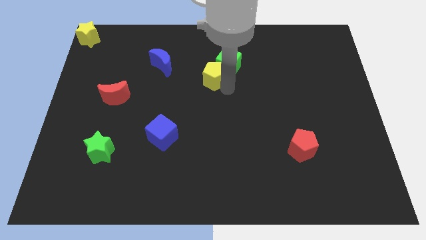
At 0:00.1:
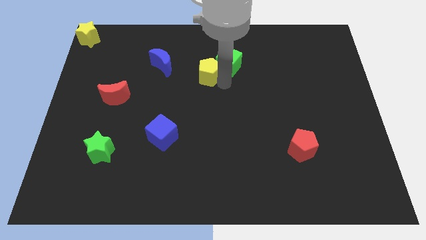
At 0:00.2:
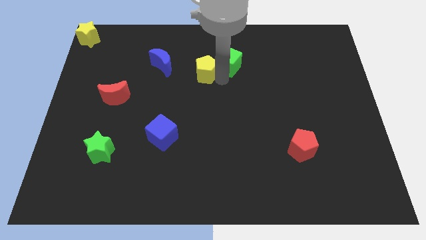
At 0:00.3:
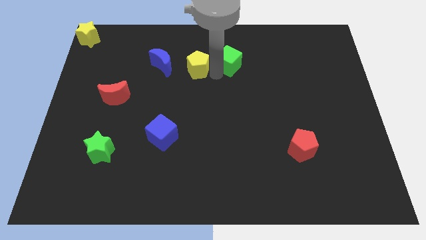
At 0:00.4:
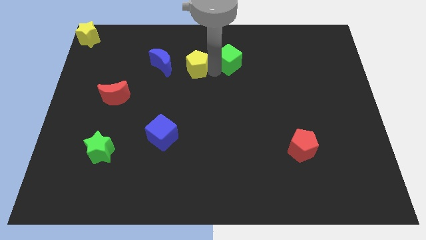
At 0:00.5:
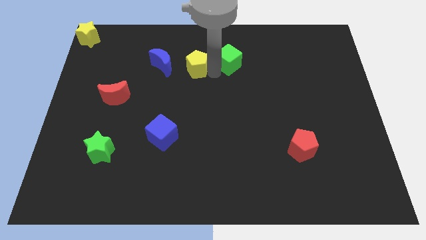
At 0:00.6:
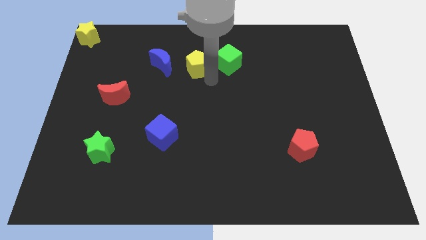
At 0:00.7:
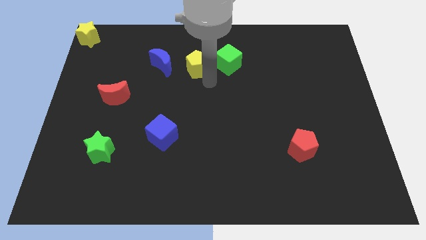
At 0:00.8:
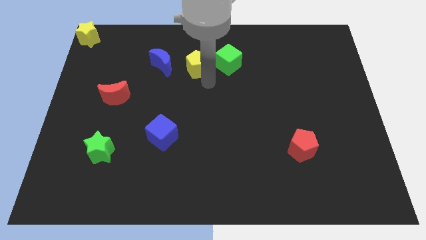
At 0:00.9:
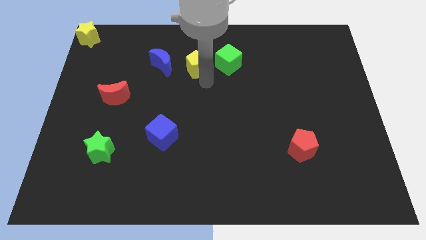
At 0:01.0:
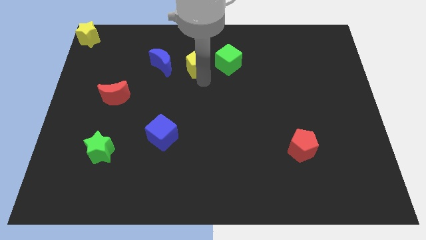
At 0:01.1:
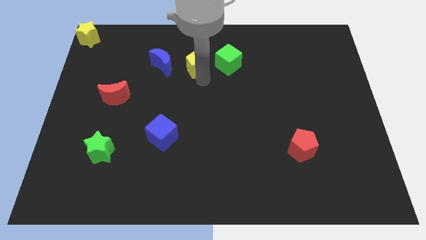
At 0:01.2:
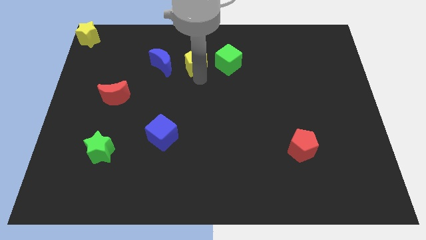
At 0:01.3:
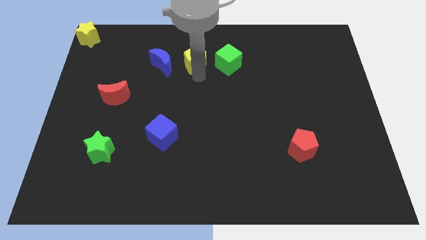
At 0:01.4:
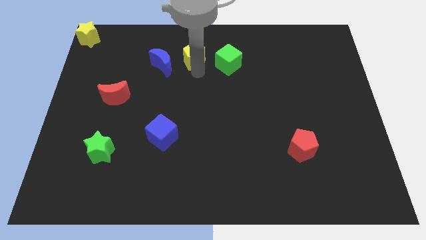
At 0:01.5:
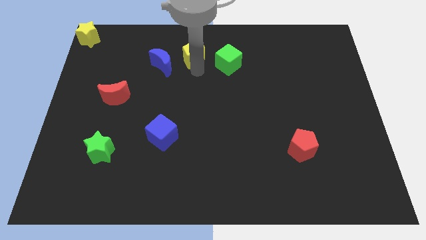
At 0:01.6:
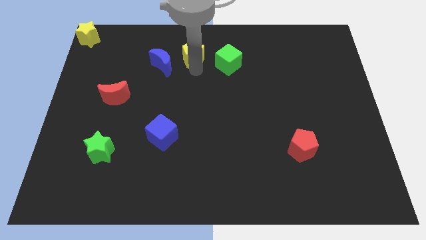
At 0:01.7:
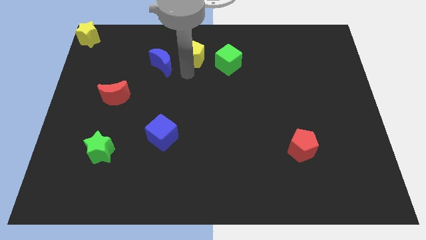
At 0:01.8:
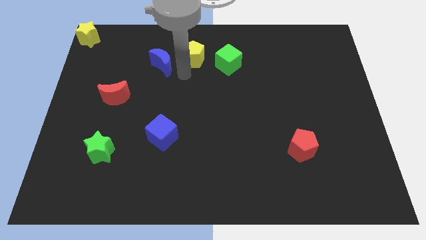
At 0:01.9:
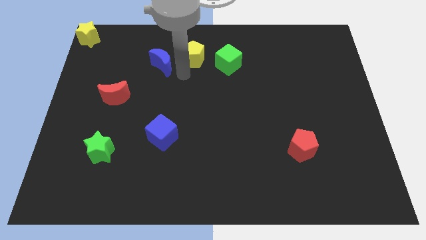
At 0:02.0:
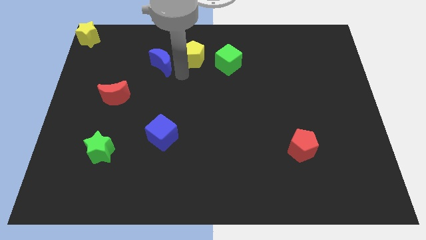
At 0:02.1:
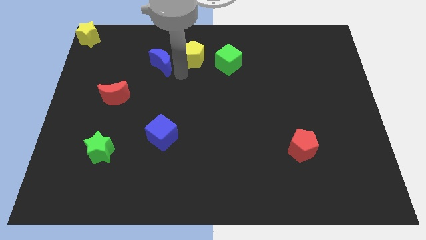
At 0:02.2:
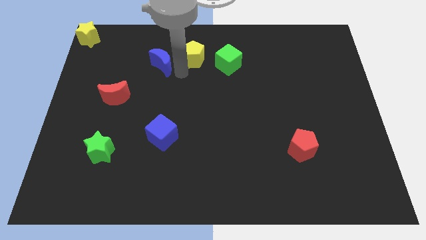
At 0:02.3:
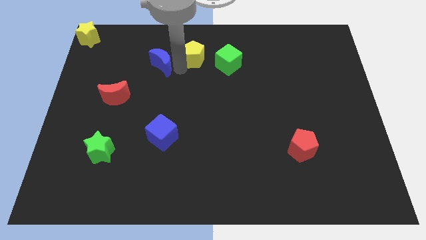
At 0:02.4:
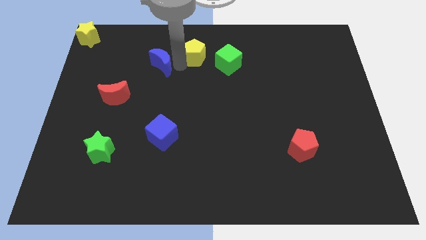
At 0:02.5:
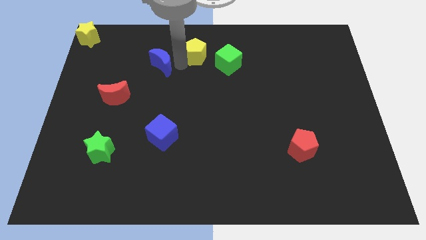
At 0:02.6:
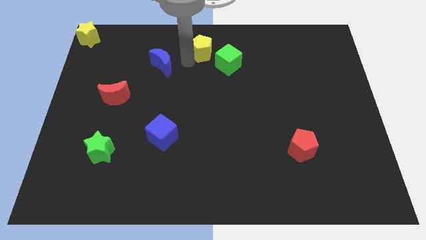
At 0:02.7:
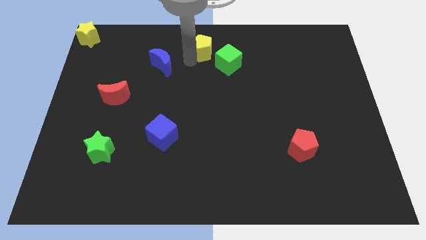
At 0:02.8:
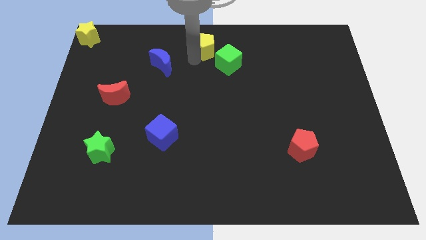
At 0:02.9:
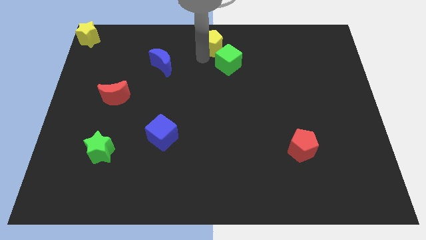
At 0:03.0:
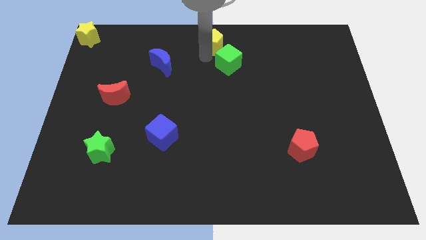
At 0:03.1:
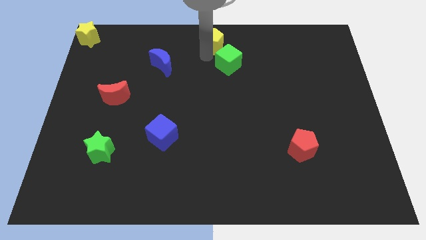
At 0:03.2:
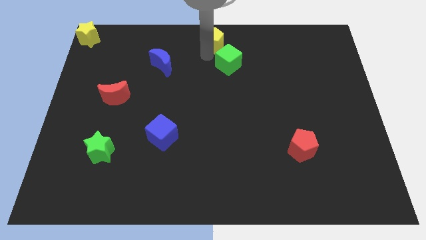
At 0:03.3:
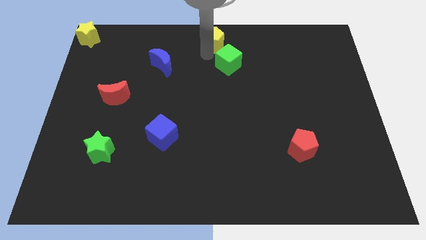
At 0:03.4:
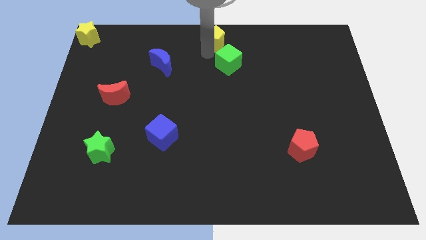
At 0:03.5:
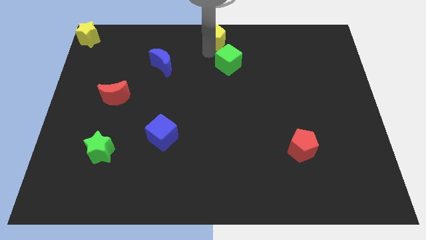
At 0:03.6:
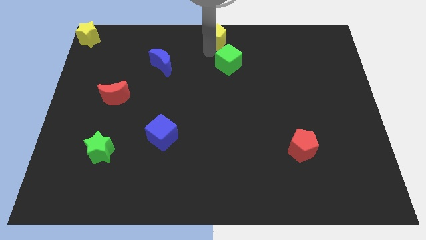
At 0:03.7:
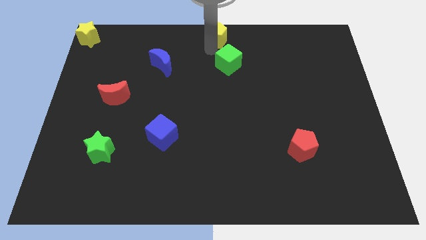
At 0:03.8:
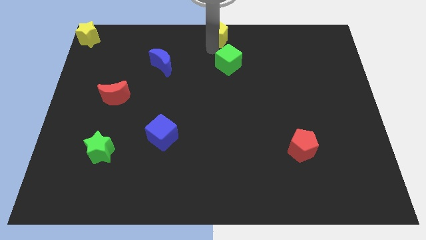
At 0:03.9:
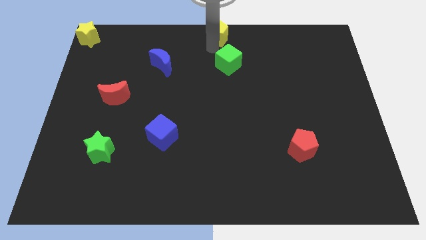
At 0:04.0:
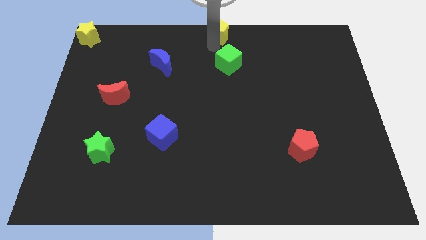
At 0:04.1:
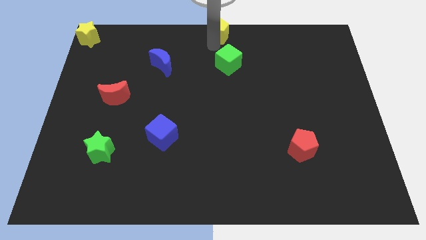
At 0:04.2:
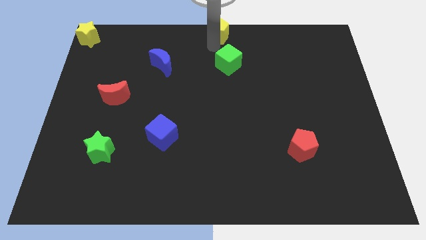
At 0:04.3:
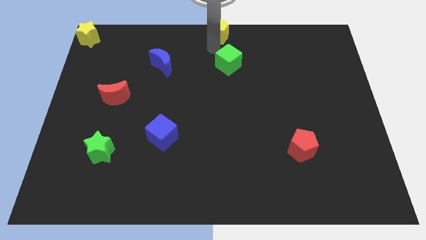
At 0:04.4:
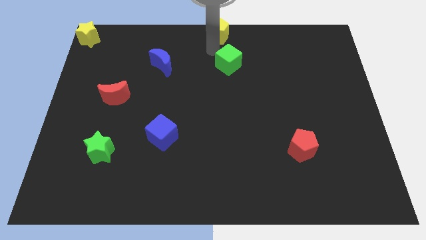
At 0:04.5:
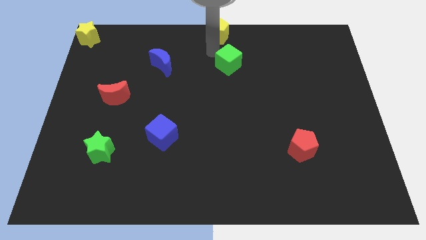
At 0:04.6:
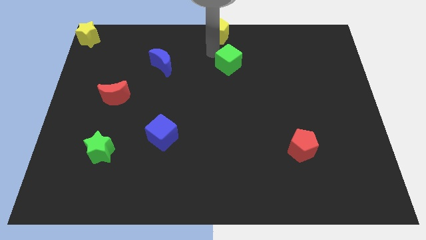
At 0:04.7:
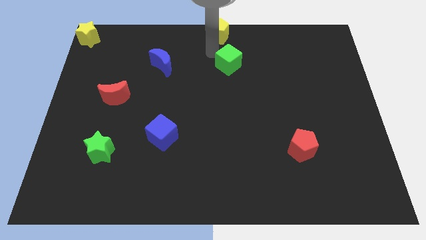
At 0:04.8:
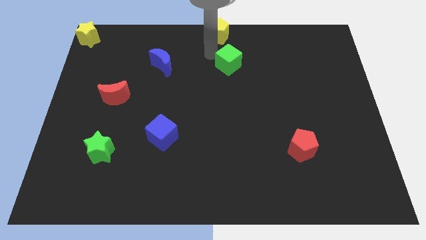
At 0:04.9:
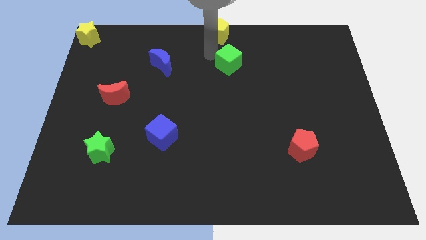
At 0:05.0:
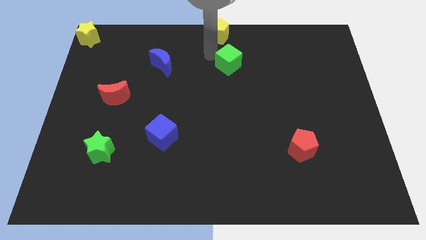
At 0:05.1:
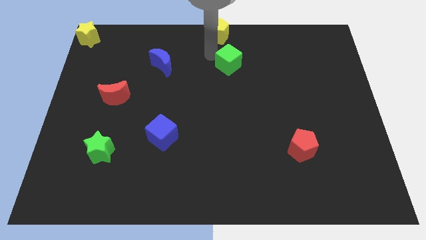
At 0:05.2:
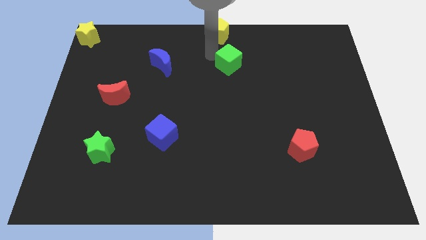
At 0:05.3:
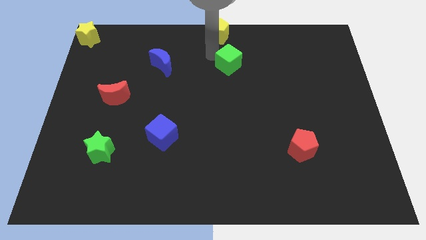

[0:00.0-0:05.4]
place the yellow pentagon at the top center of the board

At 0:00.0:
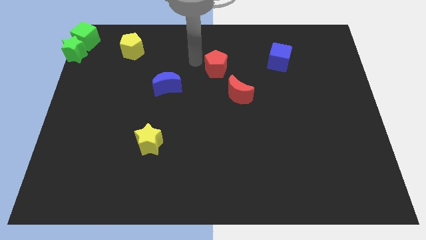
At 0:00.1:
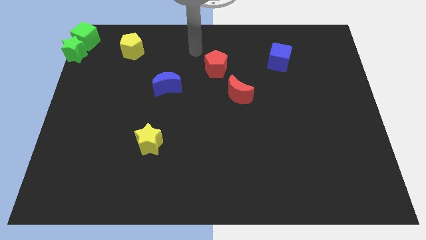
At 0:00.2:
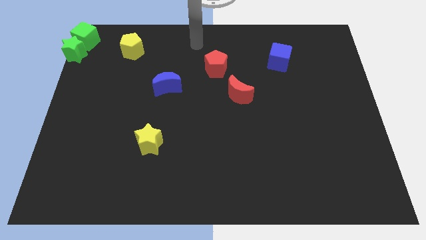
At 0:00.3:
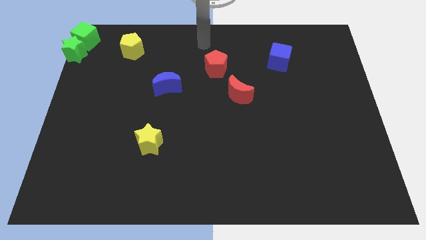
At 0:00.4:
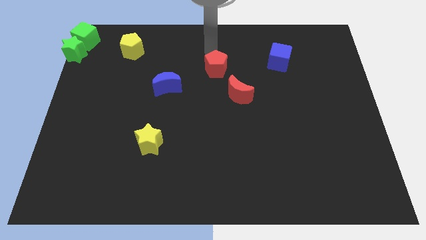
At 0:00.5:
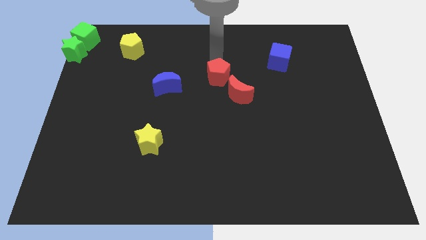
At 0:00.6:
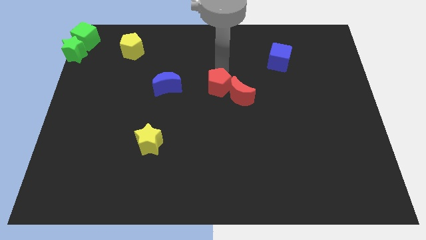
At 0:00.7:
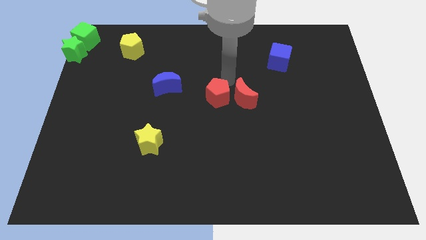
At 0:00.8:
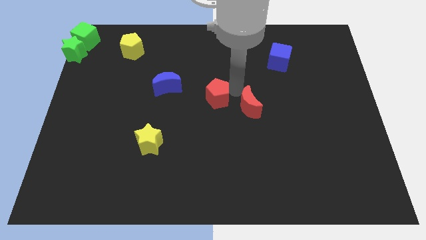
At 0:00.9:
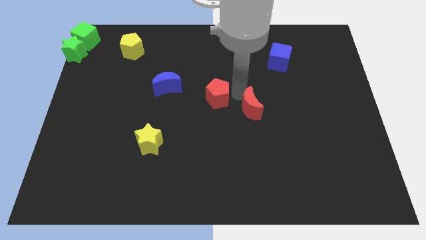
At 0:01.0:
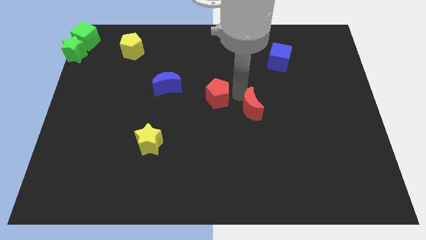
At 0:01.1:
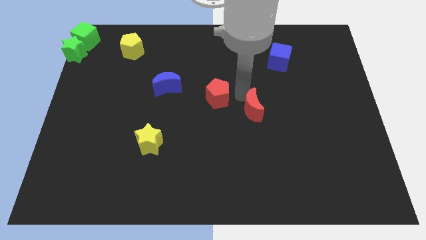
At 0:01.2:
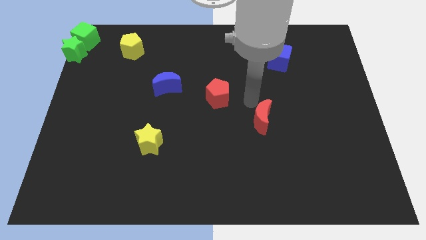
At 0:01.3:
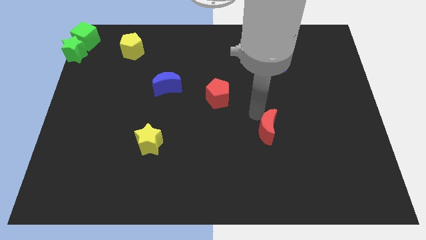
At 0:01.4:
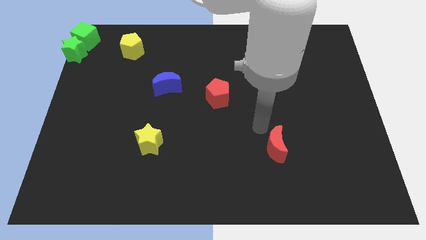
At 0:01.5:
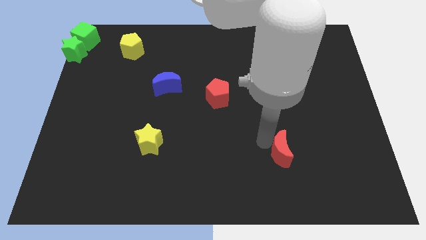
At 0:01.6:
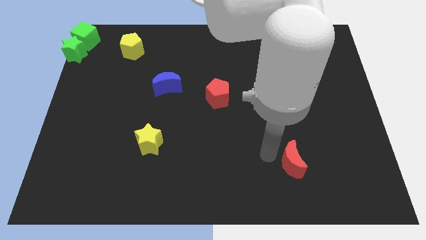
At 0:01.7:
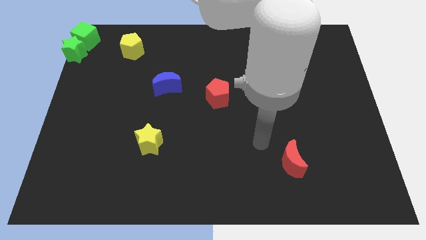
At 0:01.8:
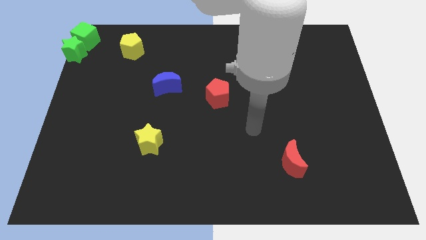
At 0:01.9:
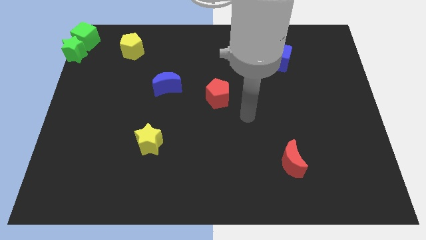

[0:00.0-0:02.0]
push the red crescent towards the right bottom of the board

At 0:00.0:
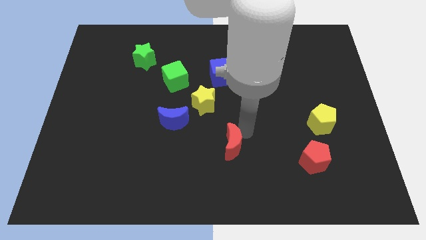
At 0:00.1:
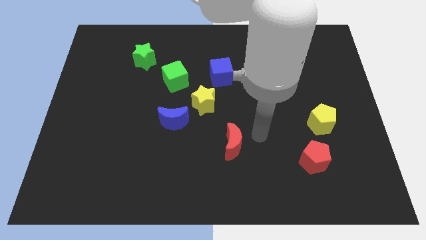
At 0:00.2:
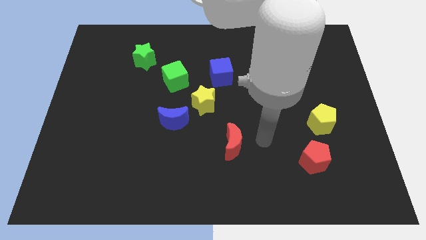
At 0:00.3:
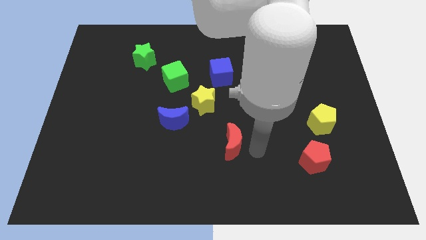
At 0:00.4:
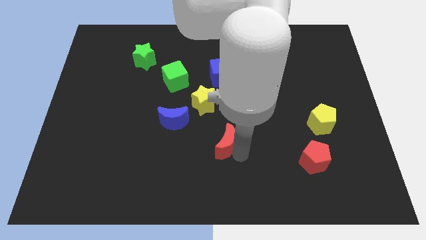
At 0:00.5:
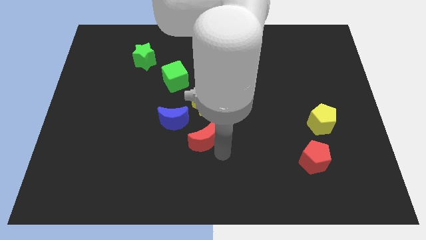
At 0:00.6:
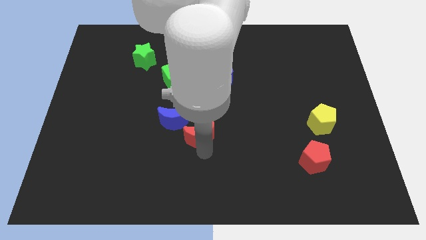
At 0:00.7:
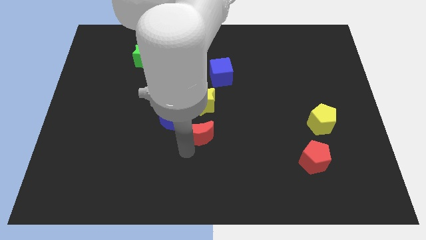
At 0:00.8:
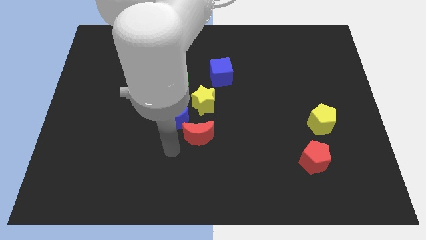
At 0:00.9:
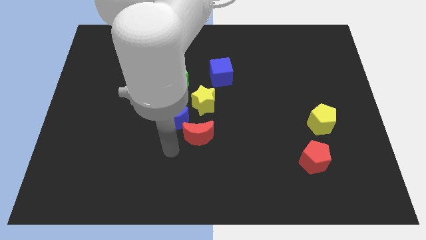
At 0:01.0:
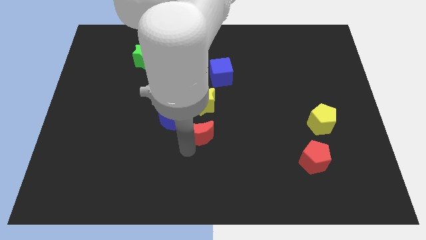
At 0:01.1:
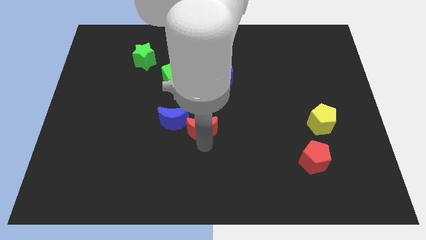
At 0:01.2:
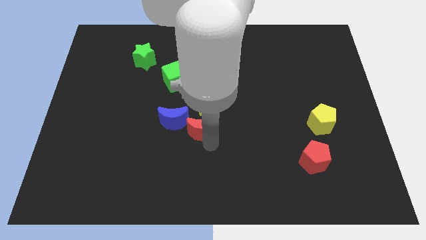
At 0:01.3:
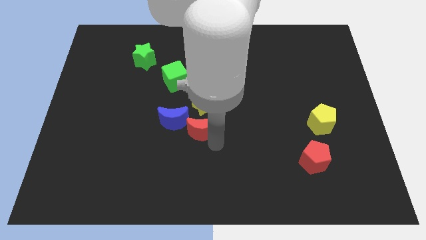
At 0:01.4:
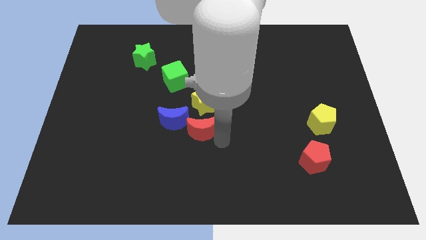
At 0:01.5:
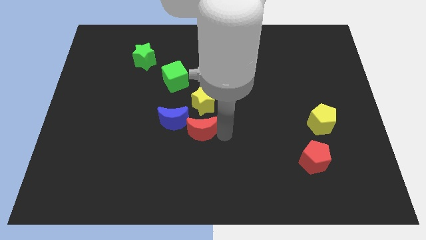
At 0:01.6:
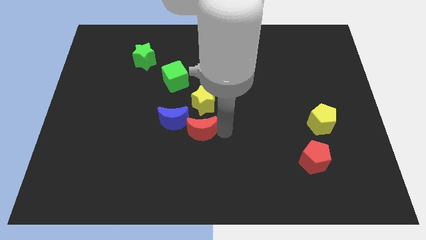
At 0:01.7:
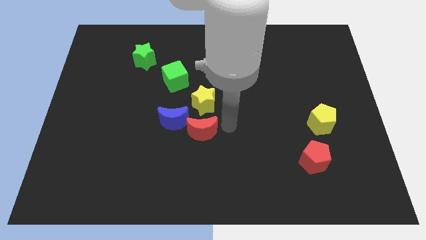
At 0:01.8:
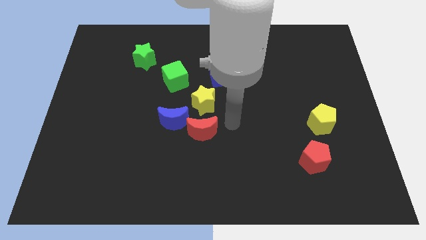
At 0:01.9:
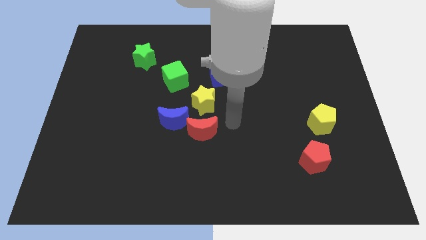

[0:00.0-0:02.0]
push the red crescent below the yellow star
